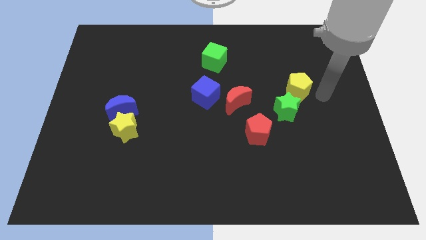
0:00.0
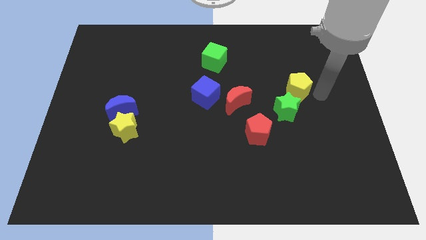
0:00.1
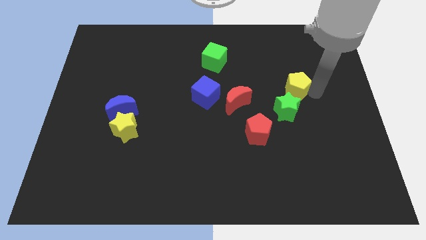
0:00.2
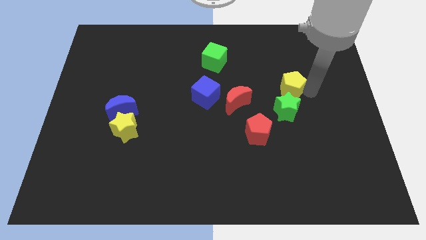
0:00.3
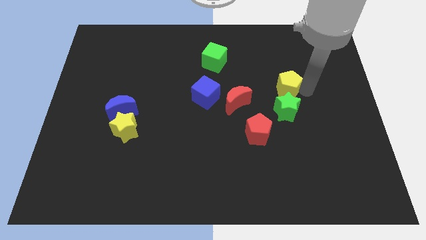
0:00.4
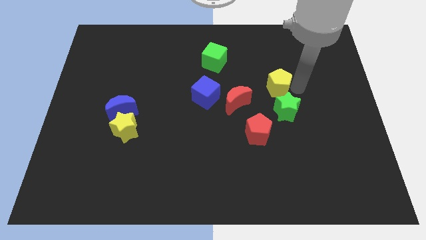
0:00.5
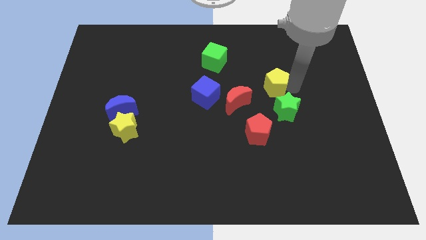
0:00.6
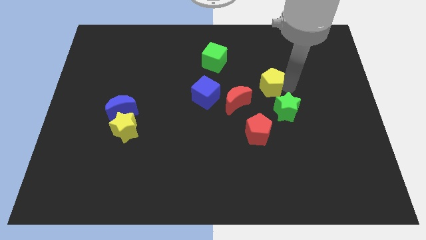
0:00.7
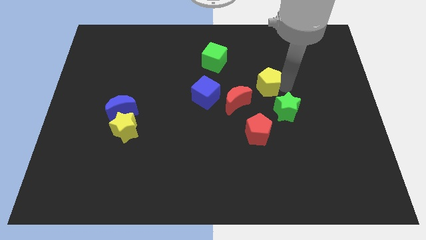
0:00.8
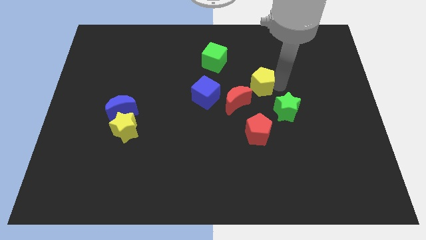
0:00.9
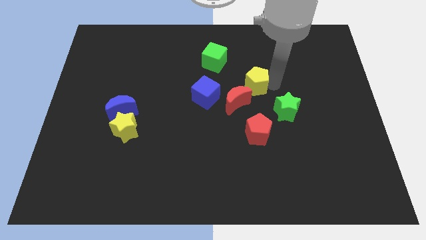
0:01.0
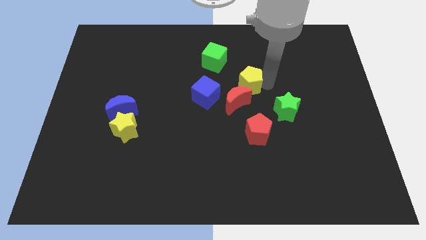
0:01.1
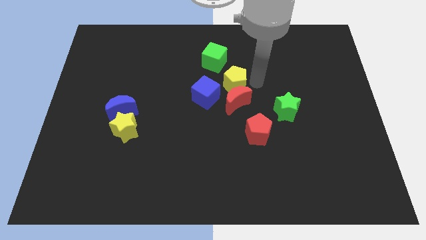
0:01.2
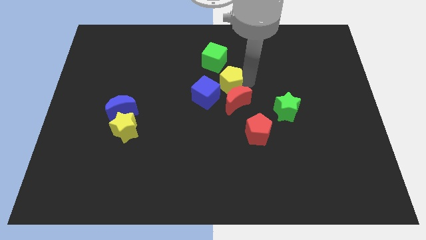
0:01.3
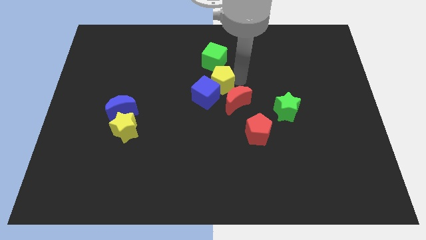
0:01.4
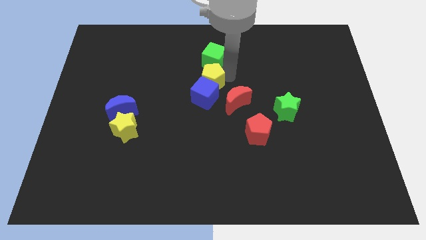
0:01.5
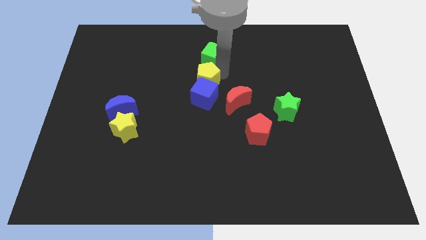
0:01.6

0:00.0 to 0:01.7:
place the yellow pentagon in between the blue cube and green cube

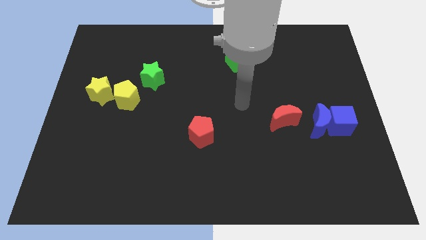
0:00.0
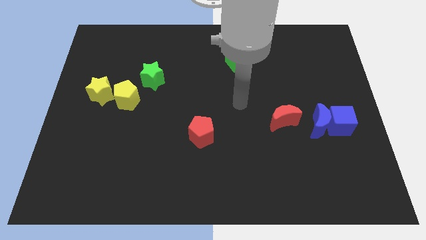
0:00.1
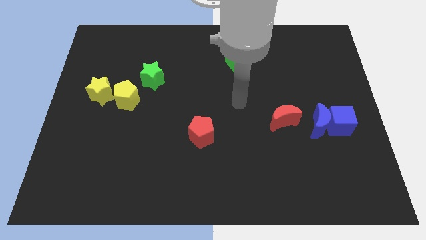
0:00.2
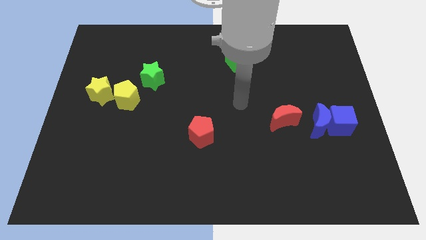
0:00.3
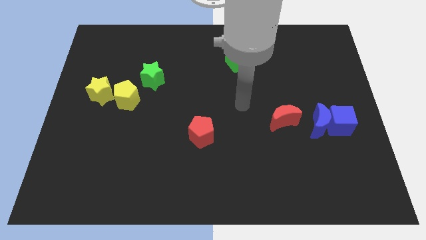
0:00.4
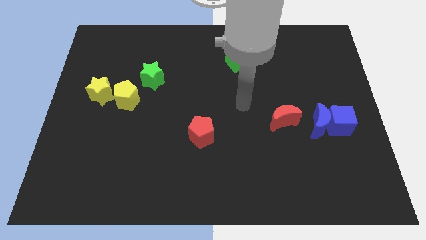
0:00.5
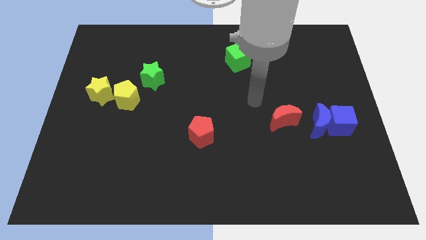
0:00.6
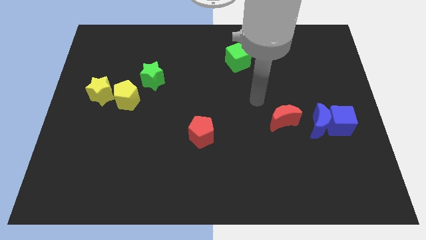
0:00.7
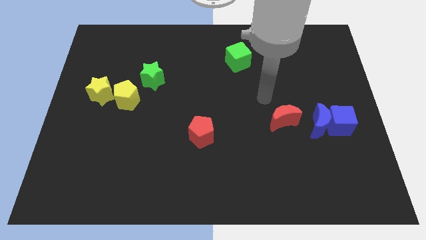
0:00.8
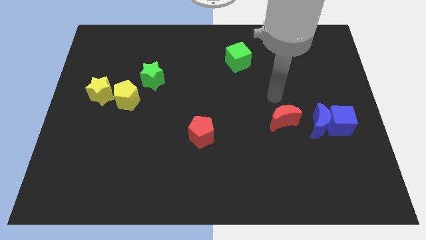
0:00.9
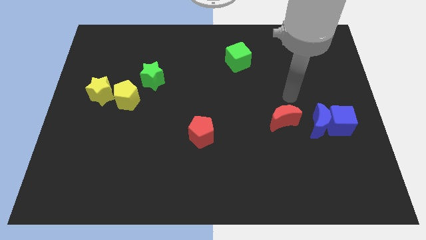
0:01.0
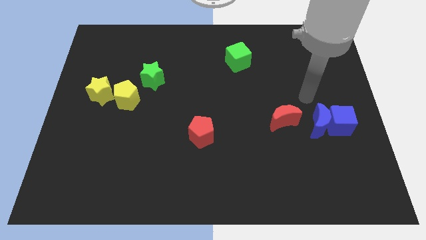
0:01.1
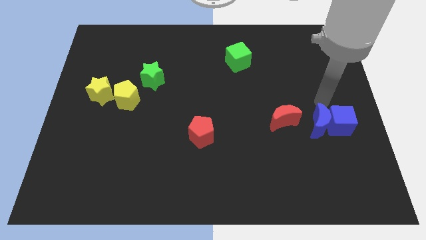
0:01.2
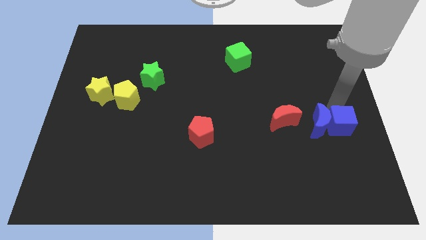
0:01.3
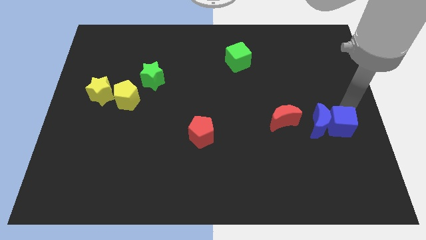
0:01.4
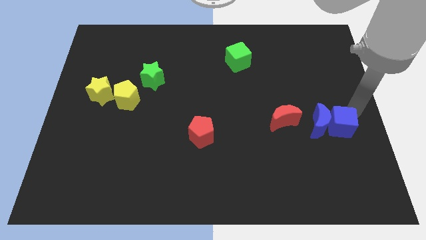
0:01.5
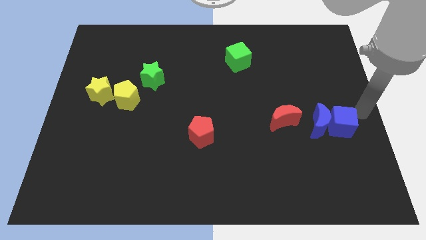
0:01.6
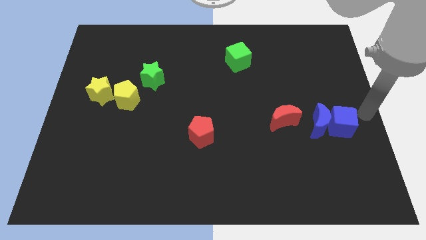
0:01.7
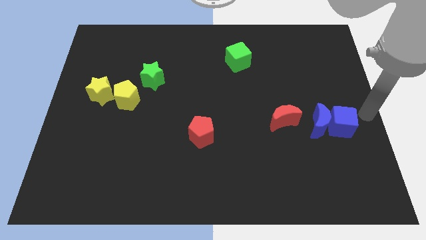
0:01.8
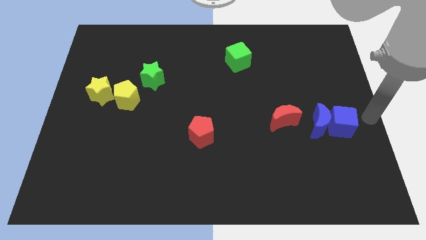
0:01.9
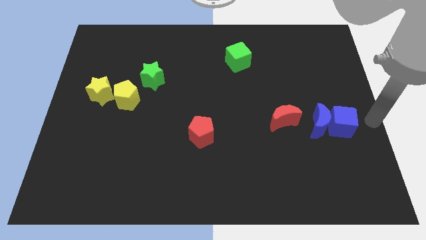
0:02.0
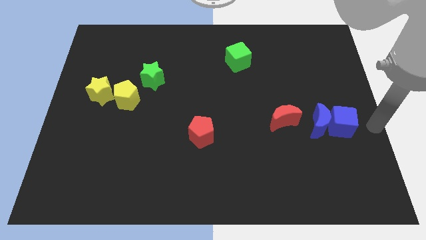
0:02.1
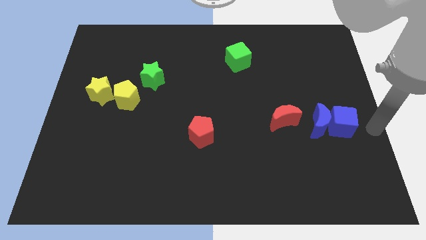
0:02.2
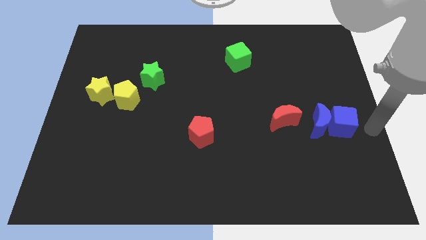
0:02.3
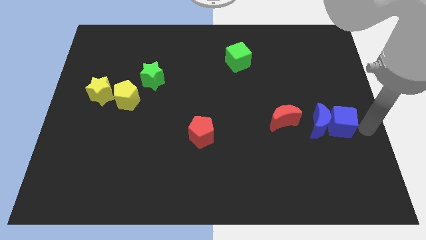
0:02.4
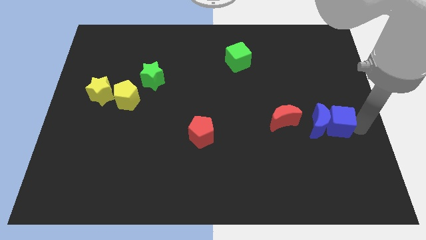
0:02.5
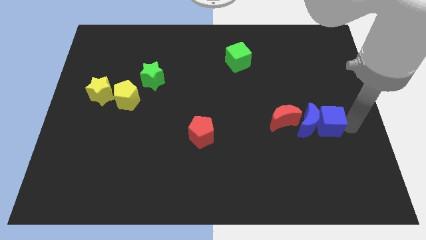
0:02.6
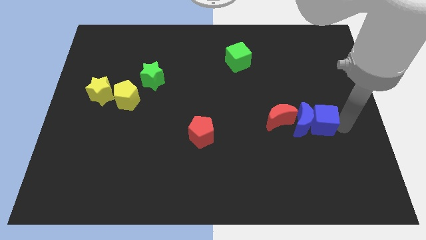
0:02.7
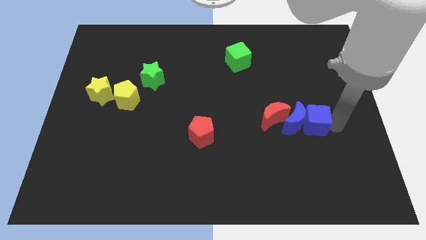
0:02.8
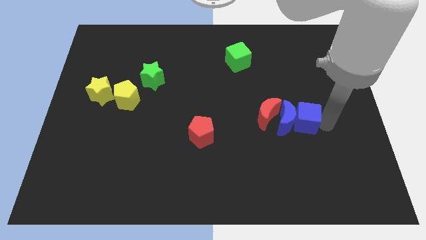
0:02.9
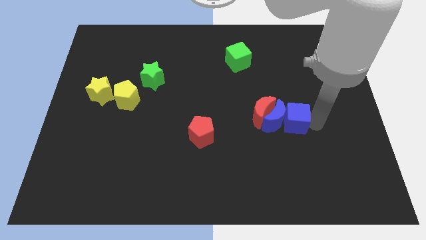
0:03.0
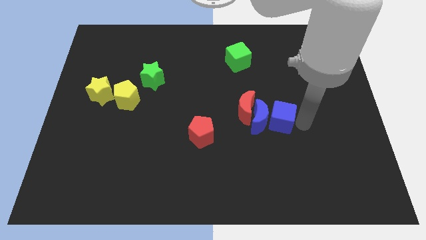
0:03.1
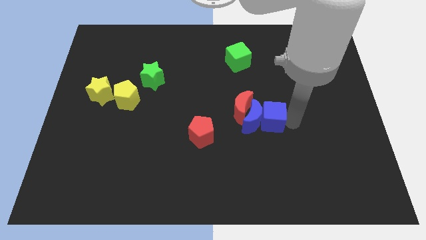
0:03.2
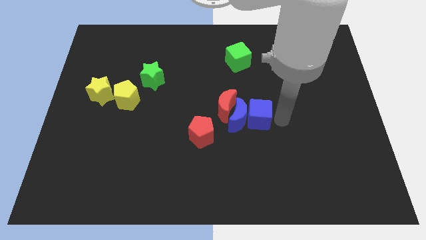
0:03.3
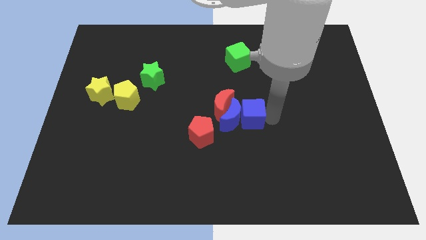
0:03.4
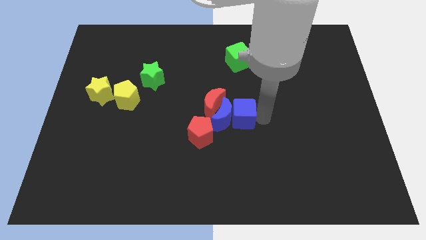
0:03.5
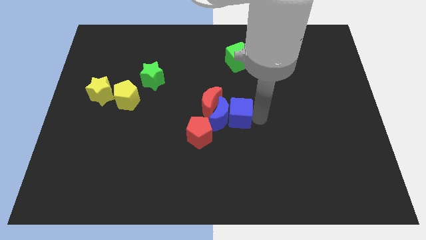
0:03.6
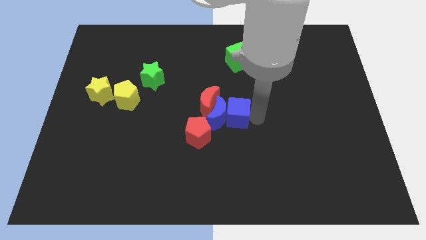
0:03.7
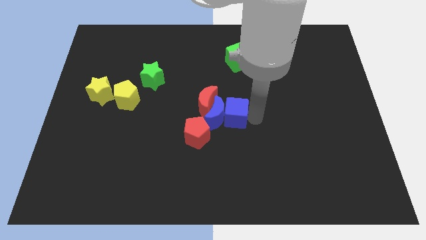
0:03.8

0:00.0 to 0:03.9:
push blue cube into red blocks

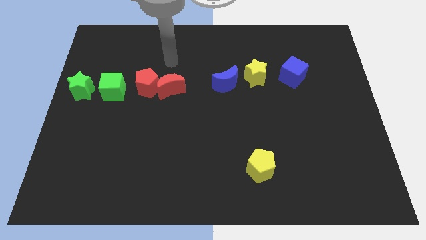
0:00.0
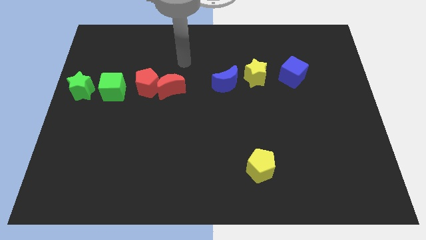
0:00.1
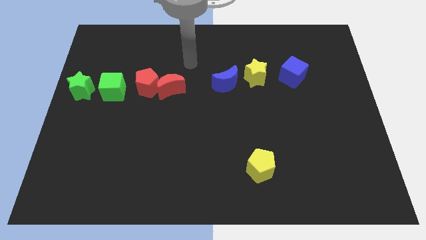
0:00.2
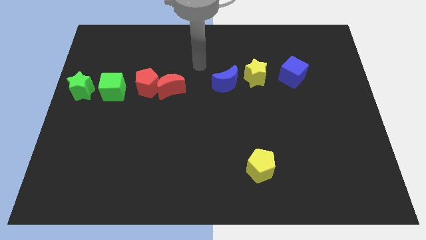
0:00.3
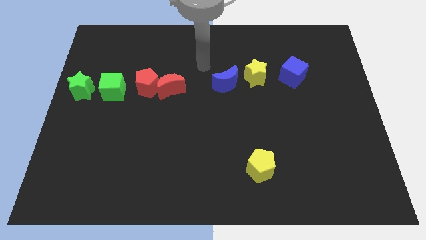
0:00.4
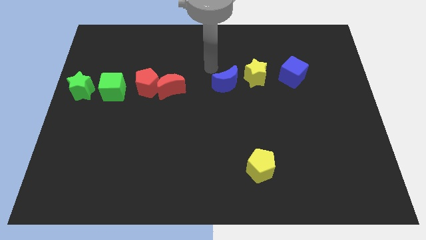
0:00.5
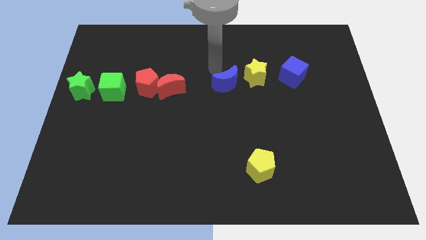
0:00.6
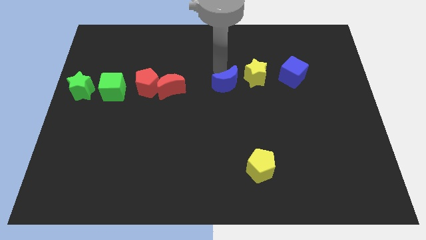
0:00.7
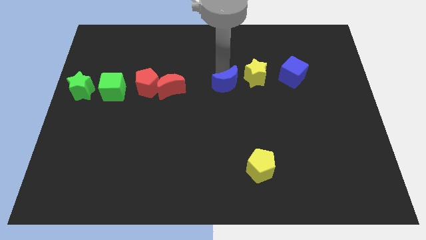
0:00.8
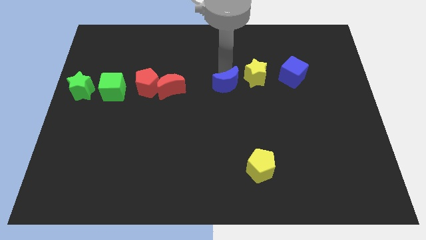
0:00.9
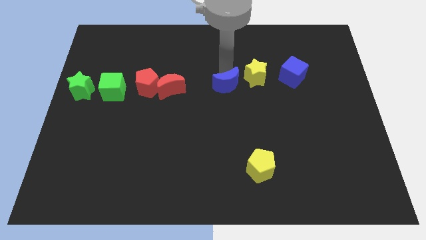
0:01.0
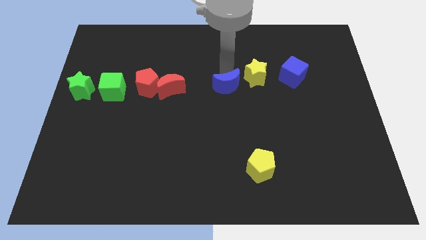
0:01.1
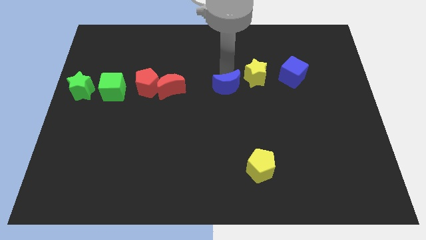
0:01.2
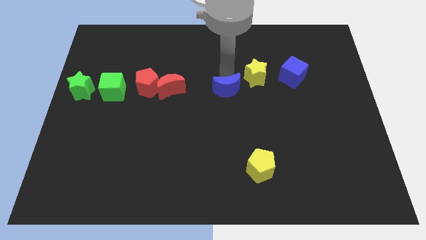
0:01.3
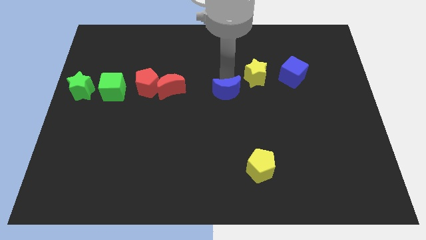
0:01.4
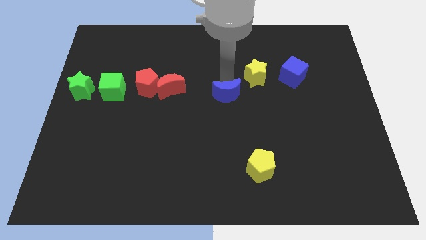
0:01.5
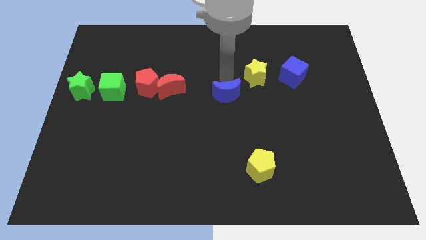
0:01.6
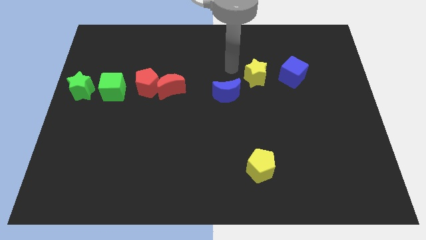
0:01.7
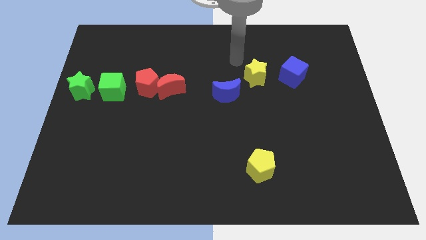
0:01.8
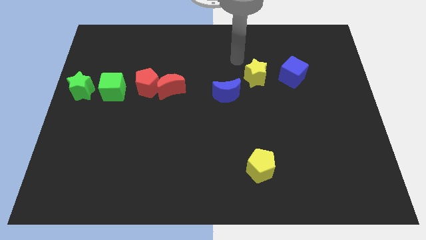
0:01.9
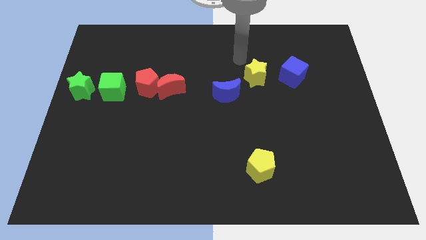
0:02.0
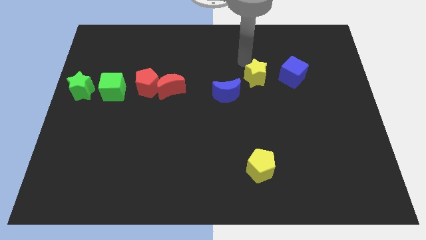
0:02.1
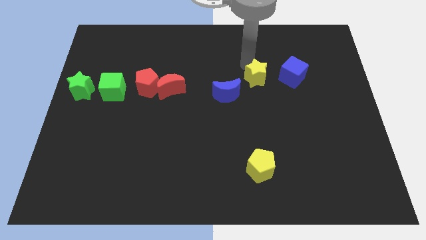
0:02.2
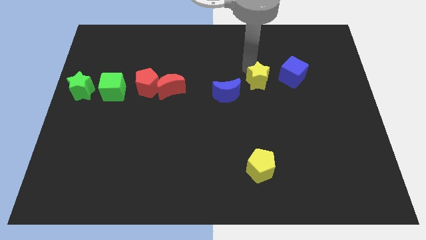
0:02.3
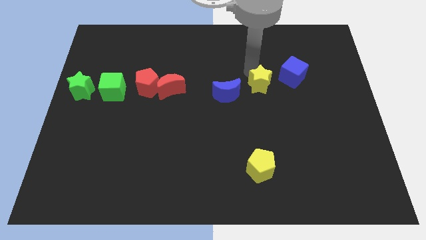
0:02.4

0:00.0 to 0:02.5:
slightly push the blue moon downwards

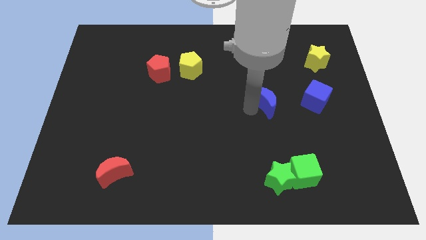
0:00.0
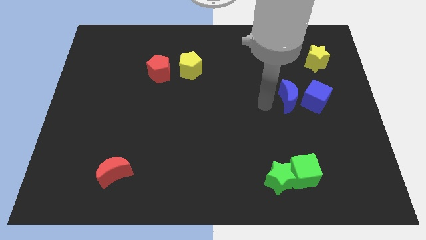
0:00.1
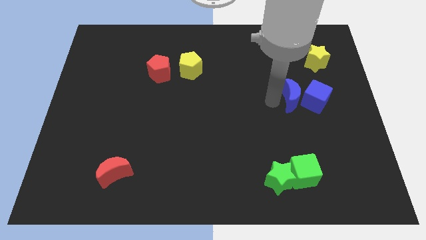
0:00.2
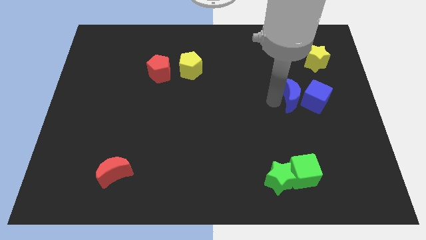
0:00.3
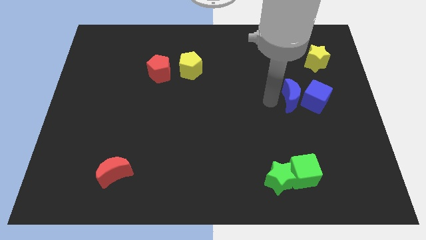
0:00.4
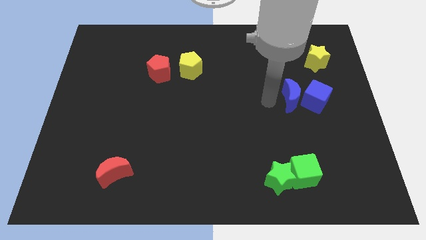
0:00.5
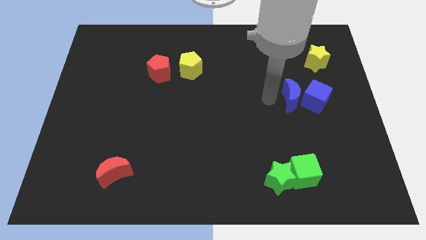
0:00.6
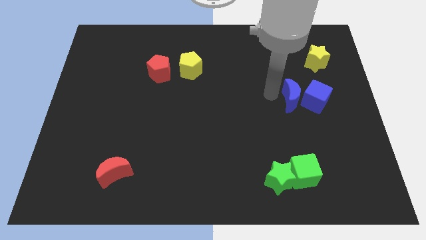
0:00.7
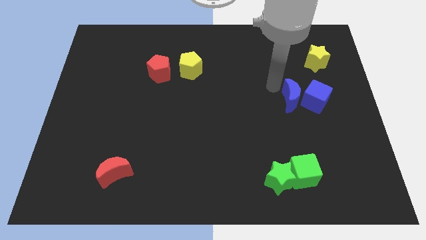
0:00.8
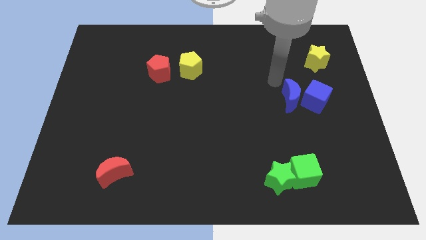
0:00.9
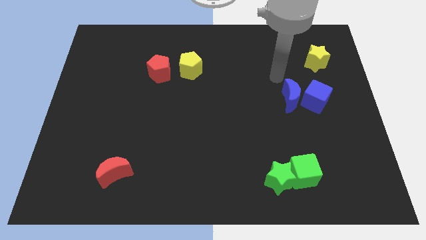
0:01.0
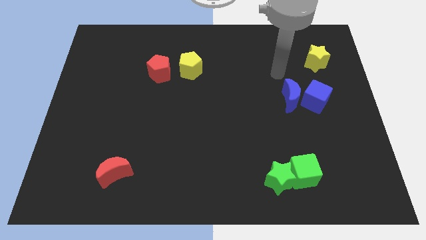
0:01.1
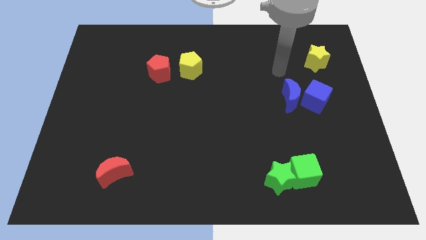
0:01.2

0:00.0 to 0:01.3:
push the blue crescent to the left of the blue cube
